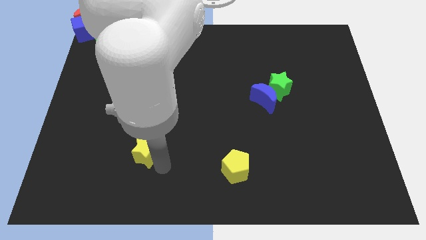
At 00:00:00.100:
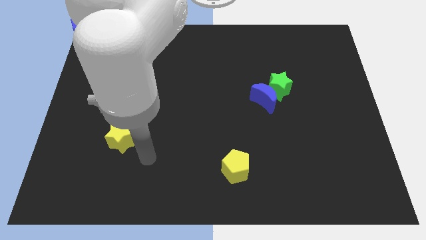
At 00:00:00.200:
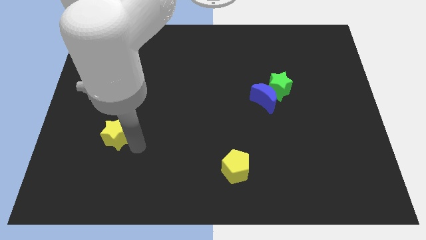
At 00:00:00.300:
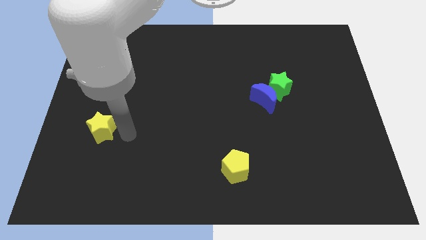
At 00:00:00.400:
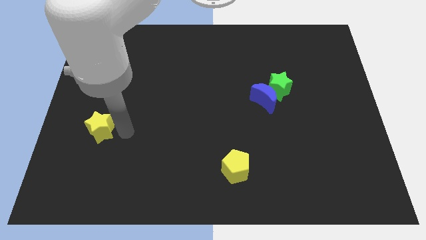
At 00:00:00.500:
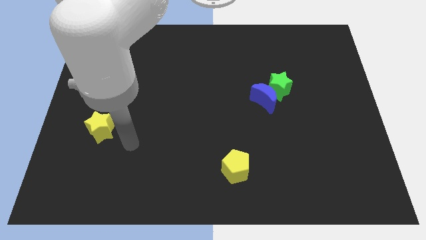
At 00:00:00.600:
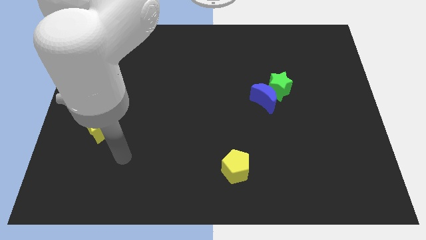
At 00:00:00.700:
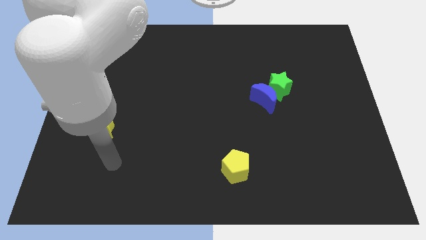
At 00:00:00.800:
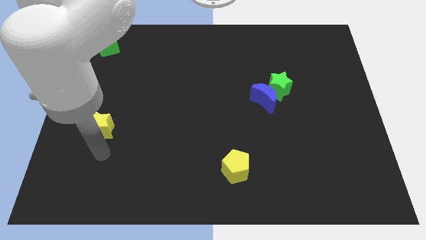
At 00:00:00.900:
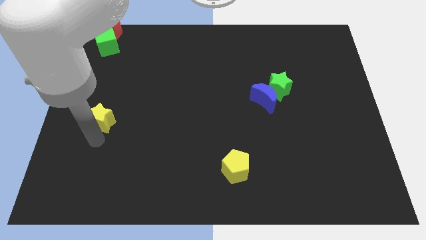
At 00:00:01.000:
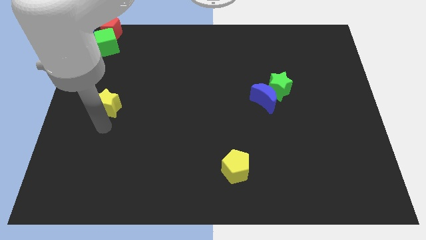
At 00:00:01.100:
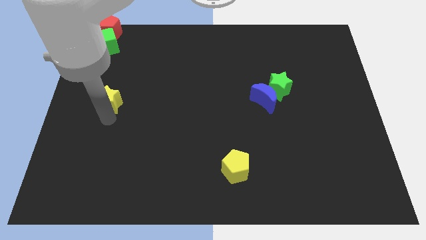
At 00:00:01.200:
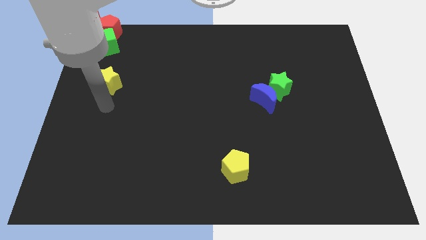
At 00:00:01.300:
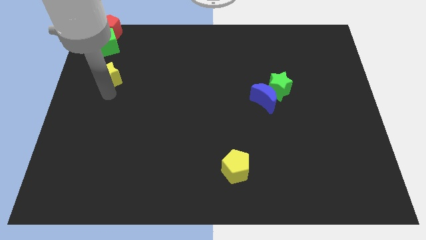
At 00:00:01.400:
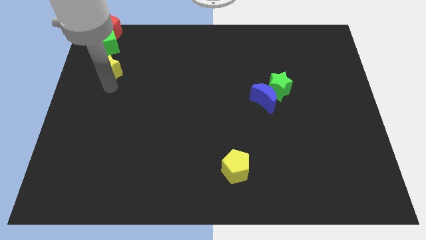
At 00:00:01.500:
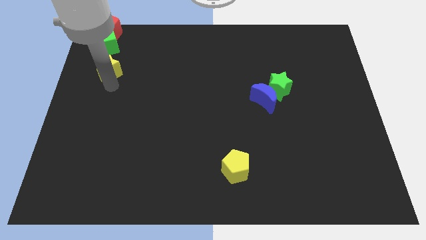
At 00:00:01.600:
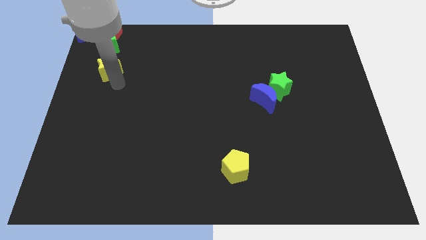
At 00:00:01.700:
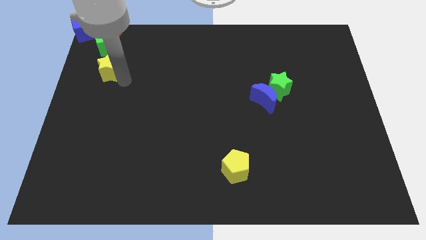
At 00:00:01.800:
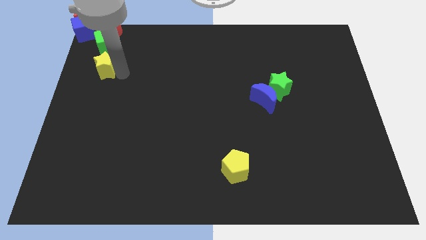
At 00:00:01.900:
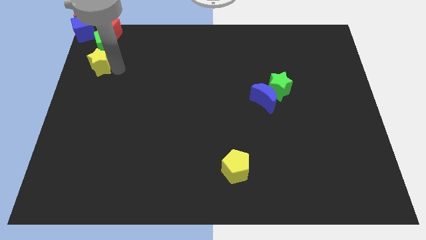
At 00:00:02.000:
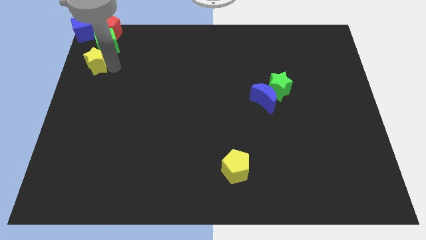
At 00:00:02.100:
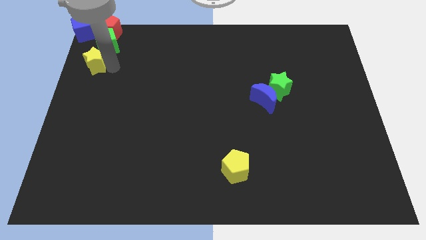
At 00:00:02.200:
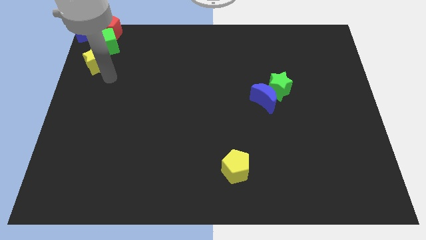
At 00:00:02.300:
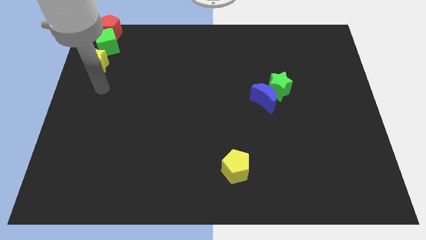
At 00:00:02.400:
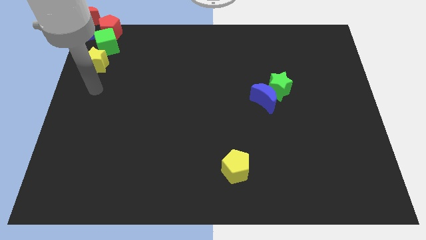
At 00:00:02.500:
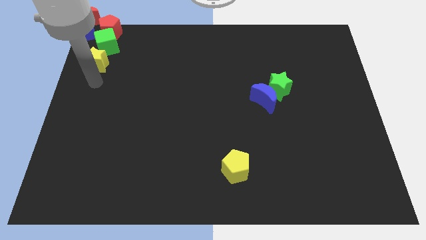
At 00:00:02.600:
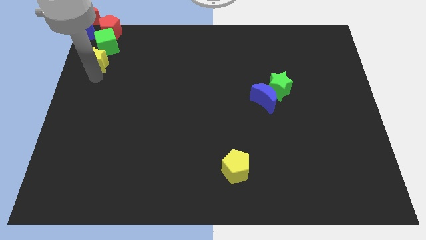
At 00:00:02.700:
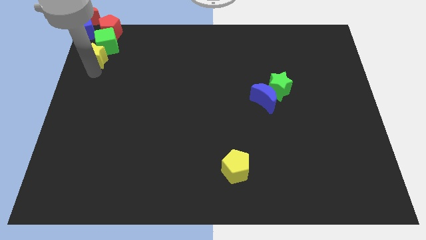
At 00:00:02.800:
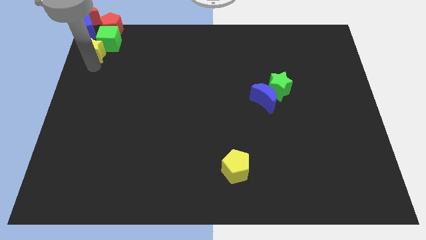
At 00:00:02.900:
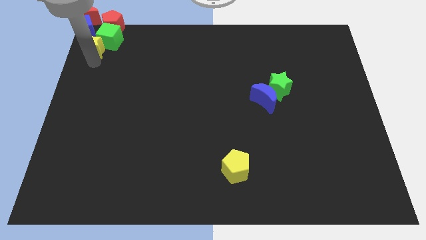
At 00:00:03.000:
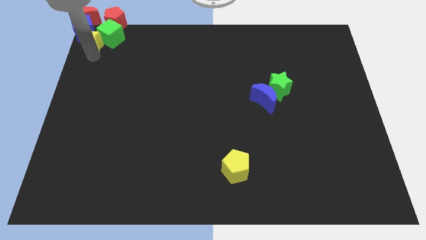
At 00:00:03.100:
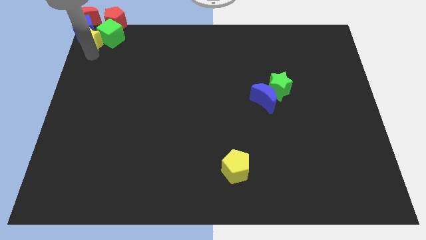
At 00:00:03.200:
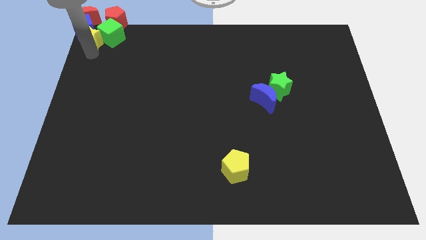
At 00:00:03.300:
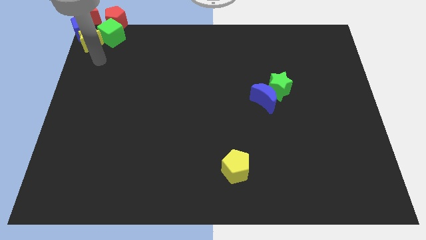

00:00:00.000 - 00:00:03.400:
move the yellow star into the group of blocks

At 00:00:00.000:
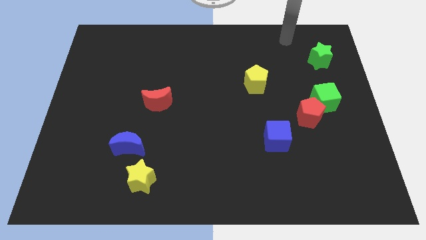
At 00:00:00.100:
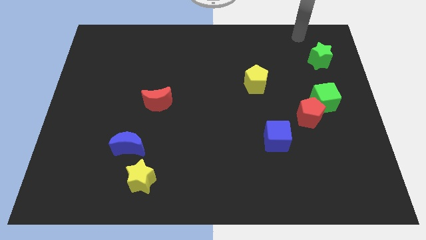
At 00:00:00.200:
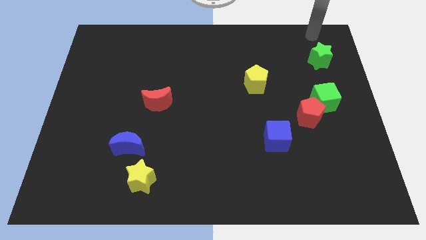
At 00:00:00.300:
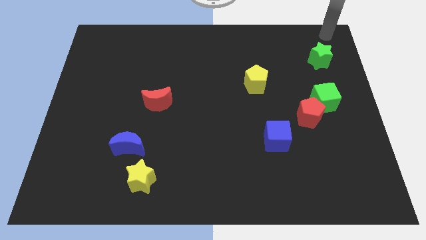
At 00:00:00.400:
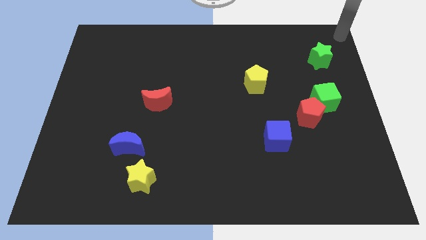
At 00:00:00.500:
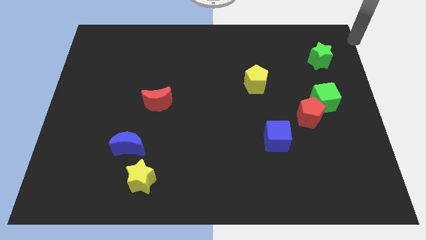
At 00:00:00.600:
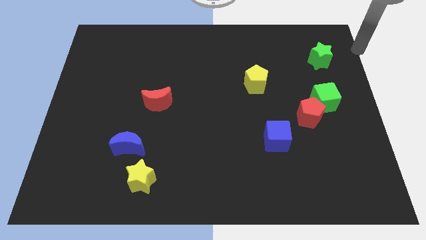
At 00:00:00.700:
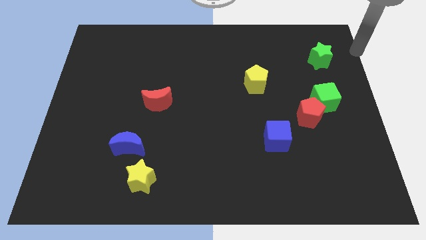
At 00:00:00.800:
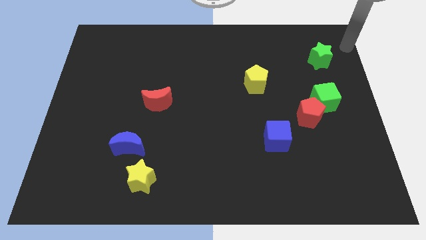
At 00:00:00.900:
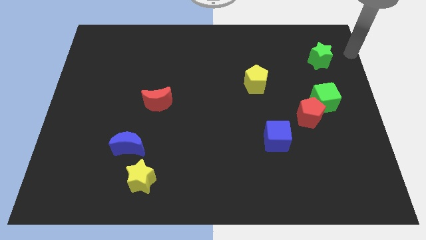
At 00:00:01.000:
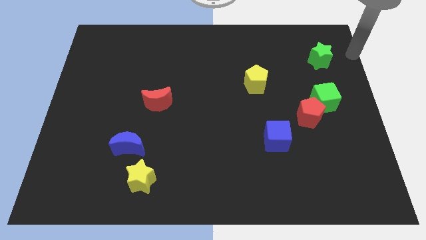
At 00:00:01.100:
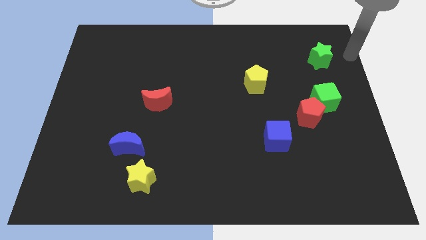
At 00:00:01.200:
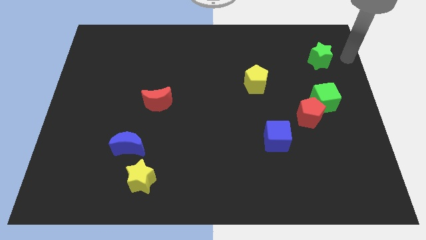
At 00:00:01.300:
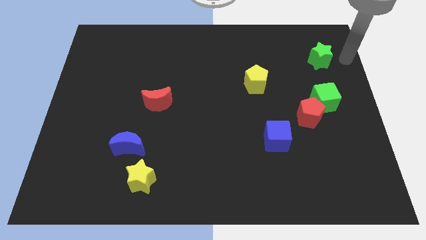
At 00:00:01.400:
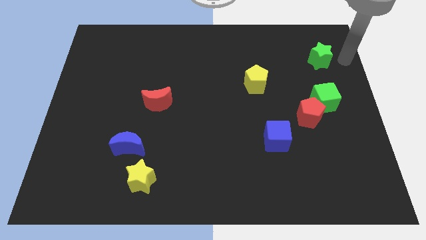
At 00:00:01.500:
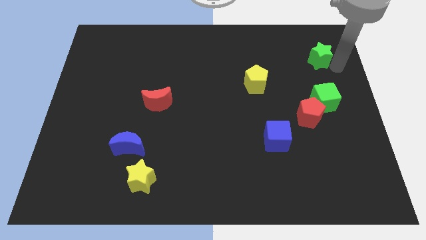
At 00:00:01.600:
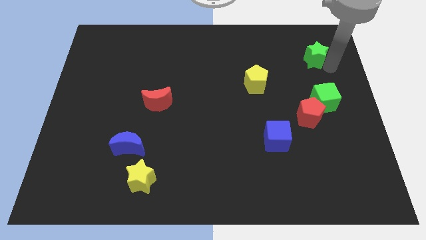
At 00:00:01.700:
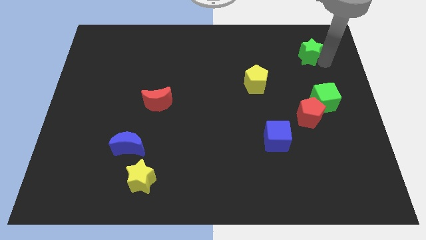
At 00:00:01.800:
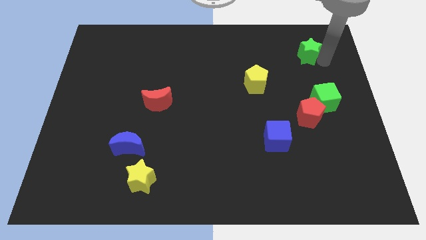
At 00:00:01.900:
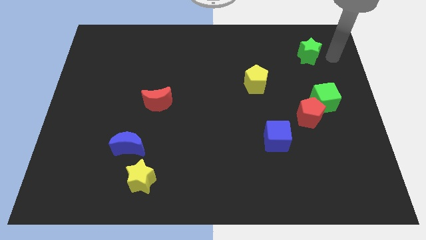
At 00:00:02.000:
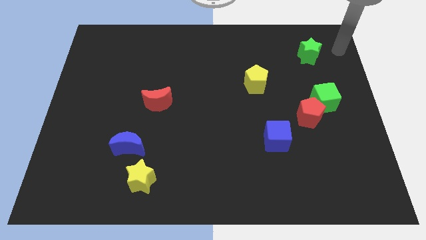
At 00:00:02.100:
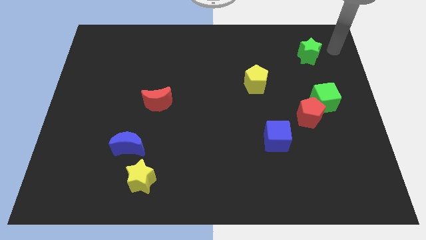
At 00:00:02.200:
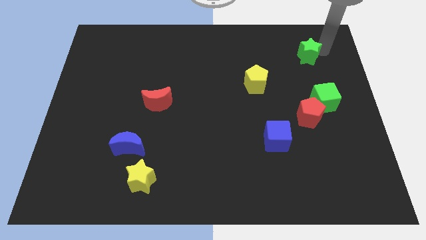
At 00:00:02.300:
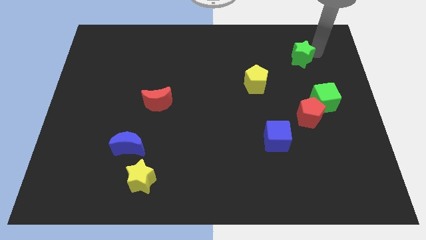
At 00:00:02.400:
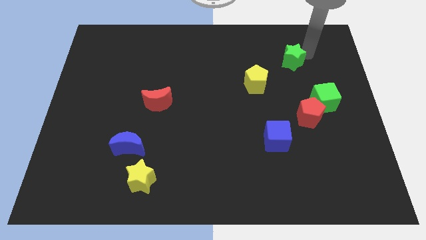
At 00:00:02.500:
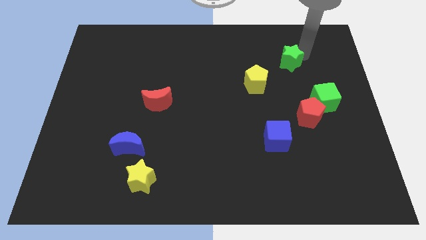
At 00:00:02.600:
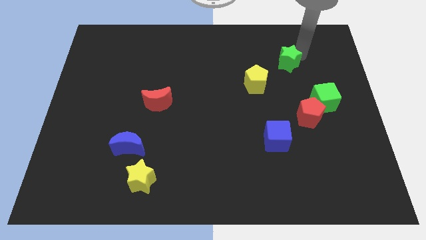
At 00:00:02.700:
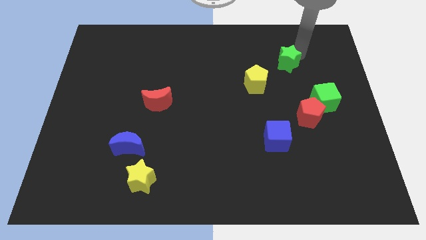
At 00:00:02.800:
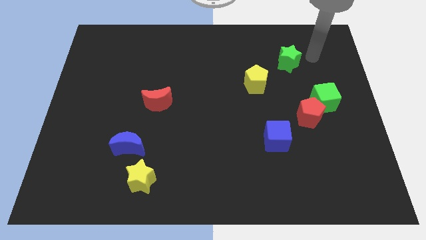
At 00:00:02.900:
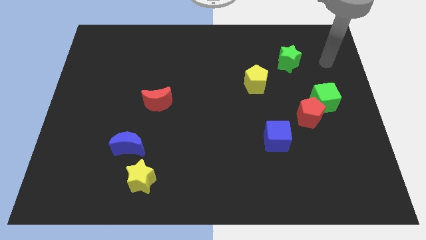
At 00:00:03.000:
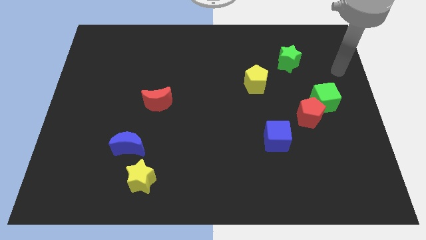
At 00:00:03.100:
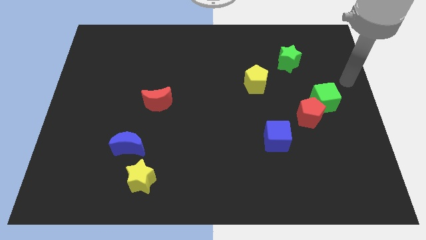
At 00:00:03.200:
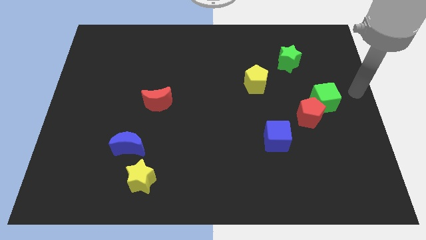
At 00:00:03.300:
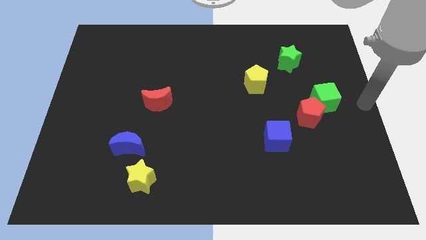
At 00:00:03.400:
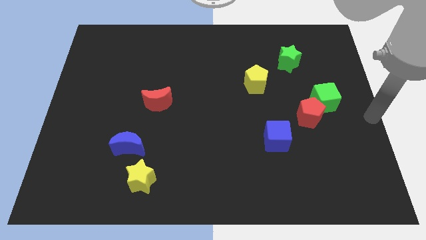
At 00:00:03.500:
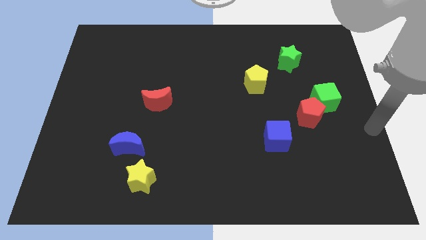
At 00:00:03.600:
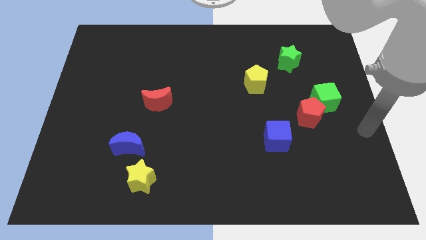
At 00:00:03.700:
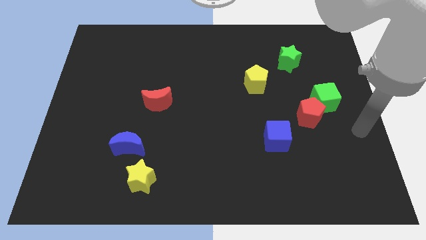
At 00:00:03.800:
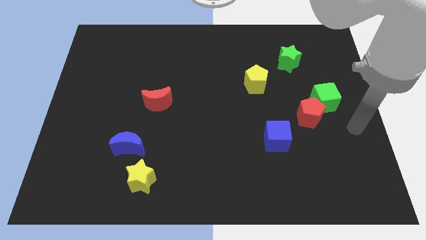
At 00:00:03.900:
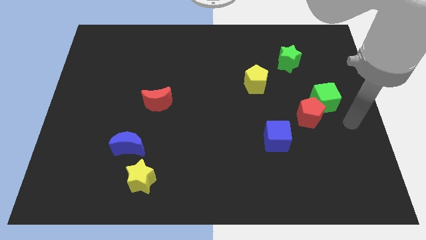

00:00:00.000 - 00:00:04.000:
move the green star to the top right side of the yellow pentagon

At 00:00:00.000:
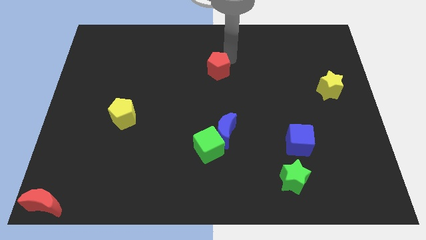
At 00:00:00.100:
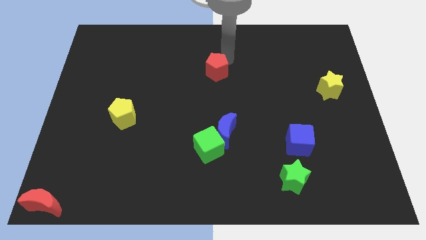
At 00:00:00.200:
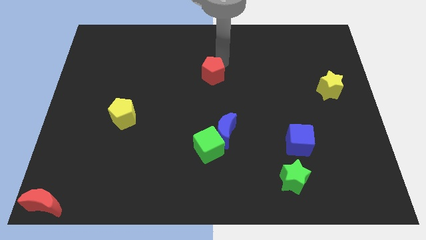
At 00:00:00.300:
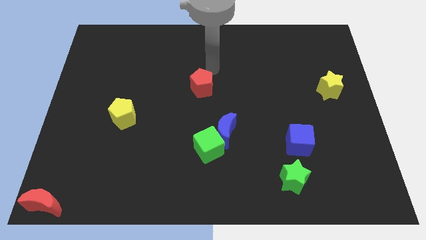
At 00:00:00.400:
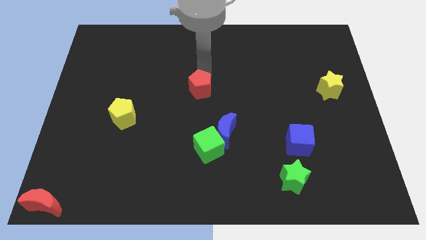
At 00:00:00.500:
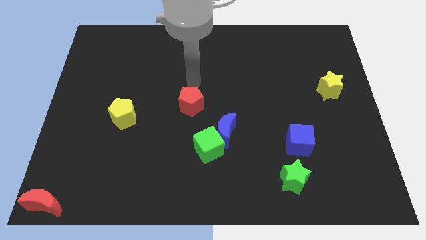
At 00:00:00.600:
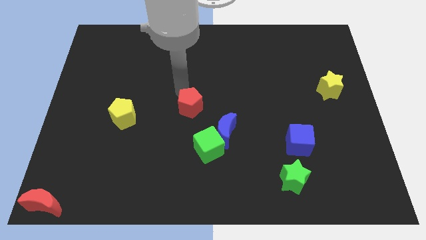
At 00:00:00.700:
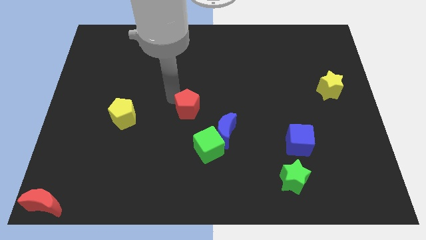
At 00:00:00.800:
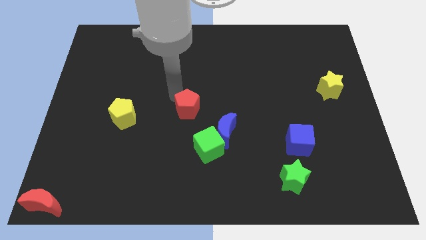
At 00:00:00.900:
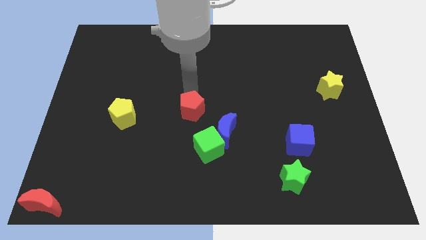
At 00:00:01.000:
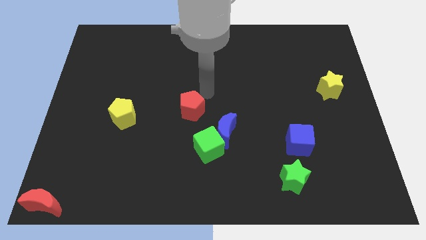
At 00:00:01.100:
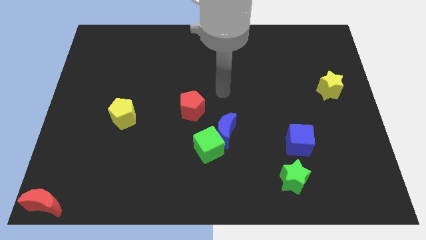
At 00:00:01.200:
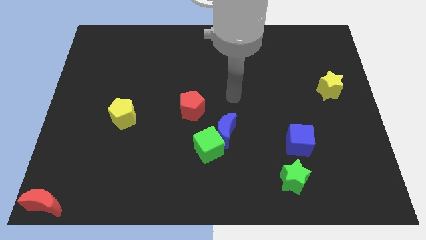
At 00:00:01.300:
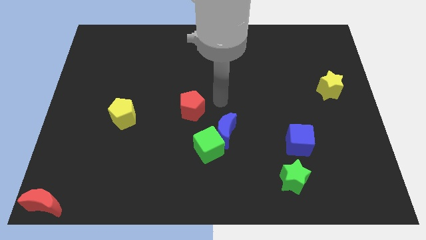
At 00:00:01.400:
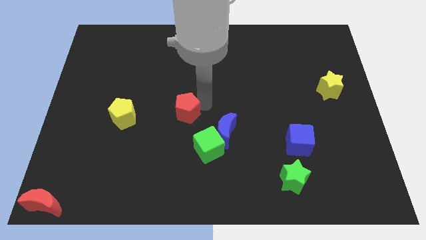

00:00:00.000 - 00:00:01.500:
place the red pentagon above the green cube
